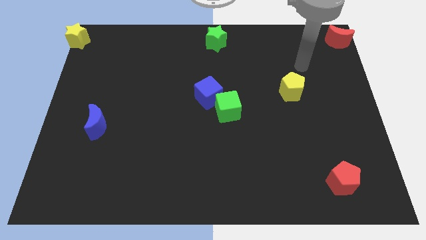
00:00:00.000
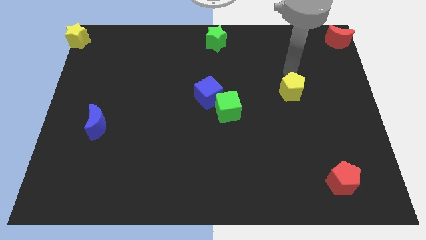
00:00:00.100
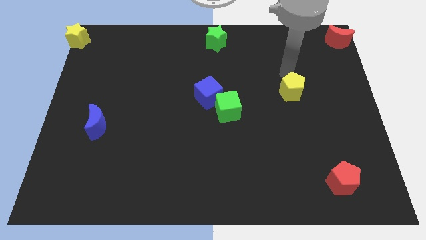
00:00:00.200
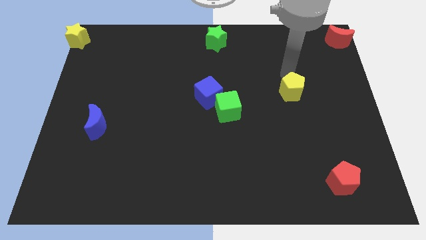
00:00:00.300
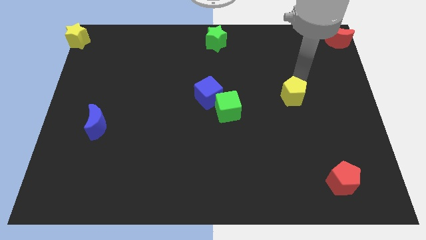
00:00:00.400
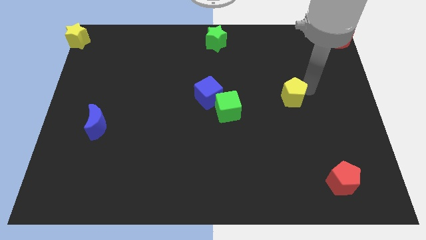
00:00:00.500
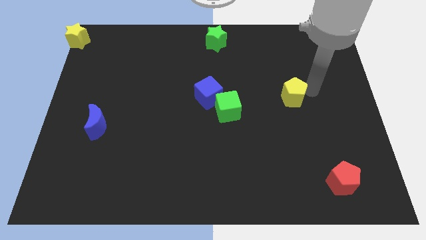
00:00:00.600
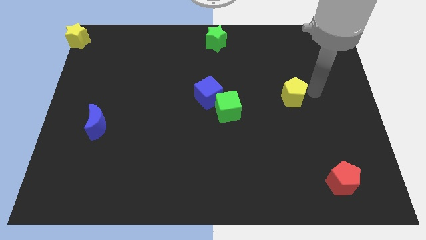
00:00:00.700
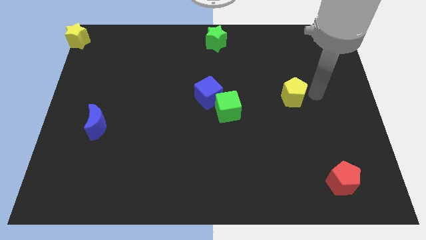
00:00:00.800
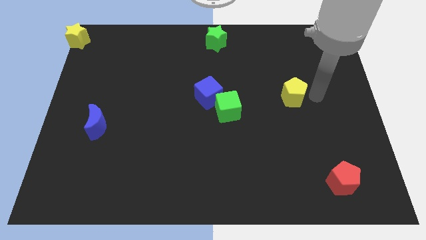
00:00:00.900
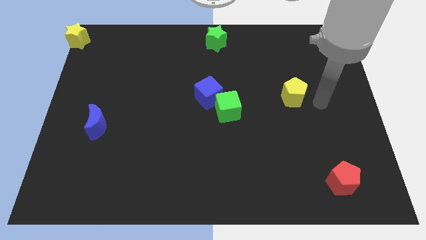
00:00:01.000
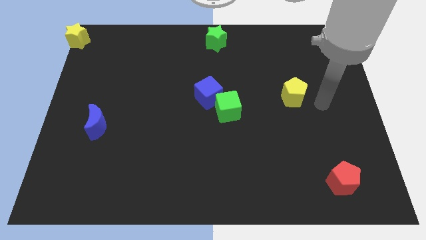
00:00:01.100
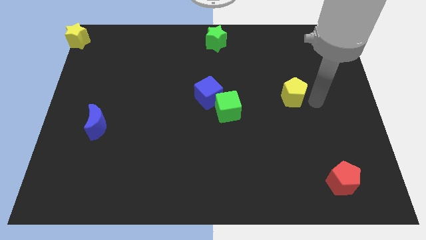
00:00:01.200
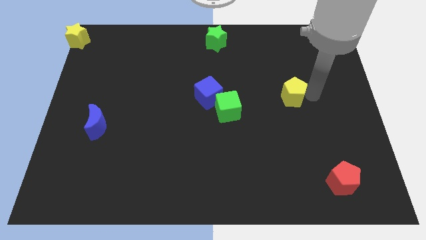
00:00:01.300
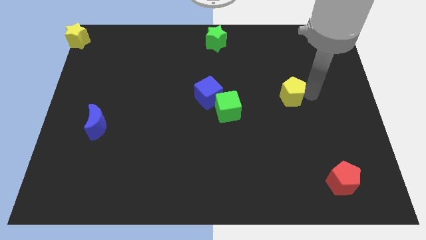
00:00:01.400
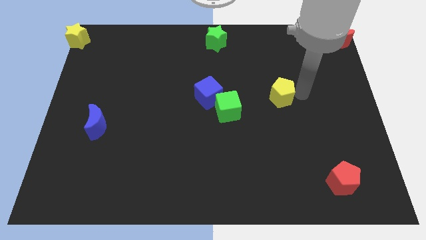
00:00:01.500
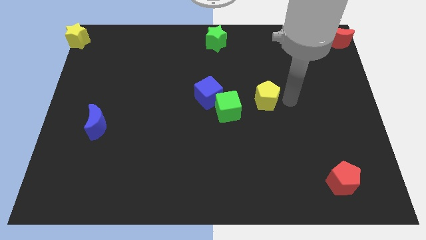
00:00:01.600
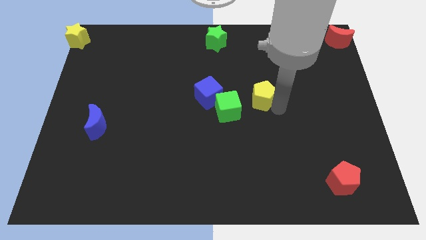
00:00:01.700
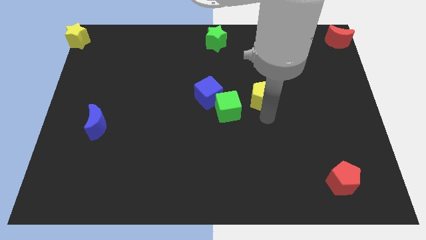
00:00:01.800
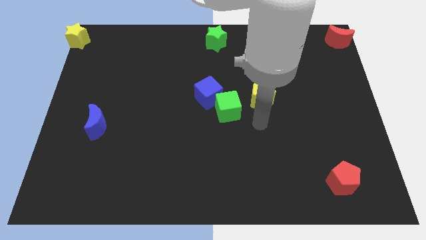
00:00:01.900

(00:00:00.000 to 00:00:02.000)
slightly push the yellow pentagon towards the center of the board

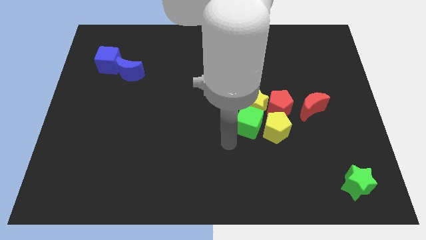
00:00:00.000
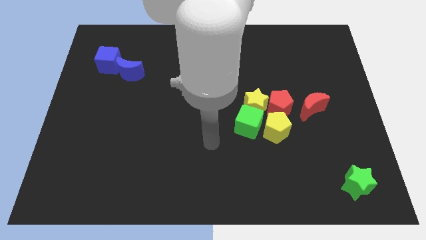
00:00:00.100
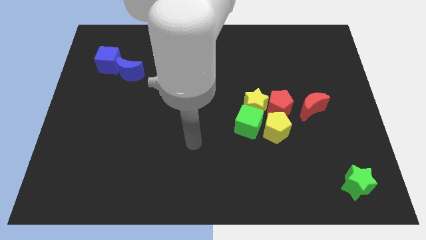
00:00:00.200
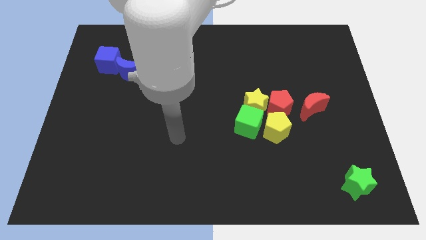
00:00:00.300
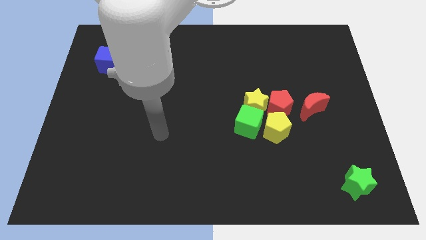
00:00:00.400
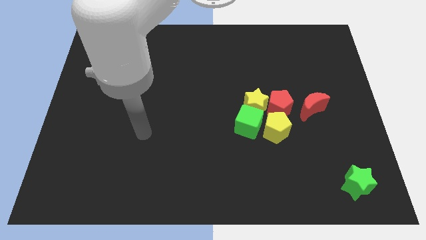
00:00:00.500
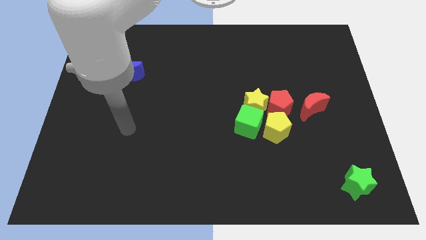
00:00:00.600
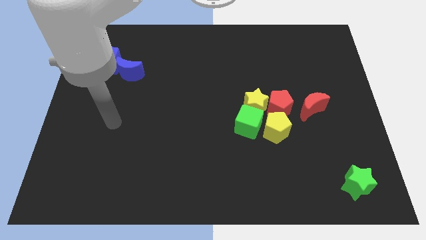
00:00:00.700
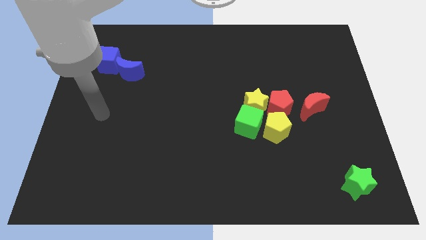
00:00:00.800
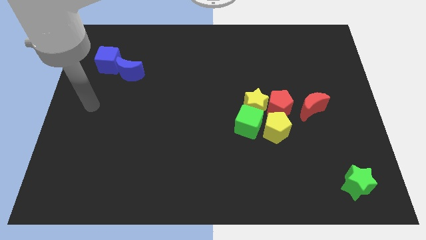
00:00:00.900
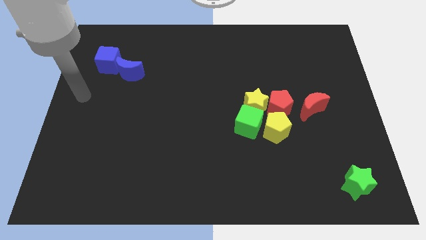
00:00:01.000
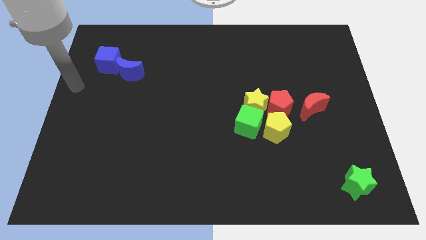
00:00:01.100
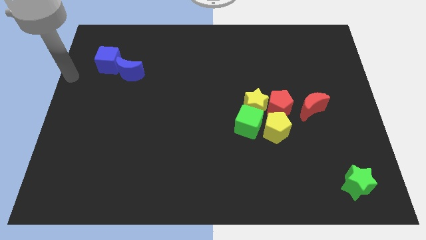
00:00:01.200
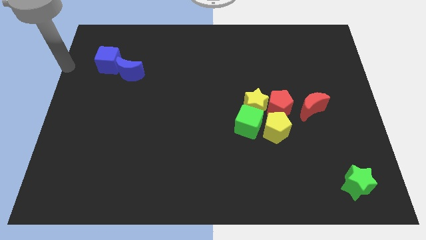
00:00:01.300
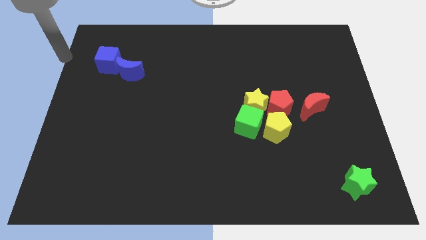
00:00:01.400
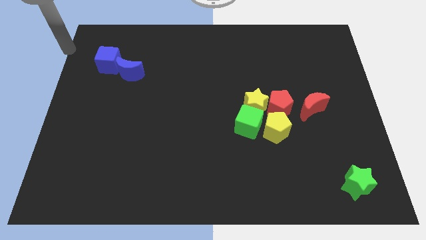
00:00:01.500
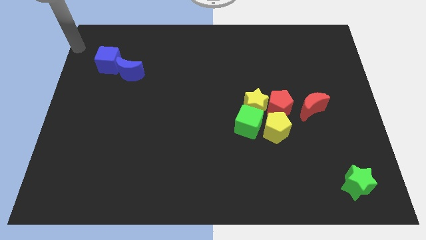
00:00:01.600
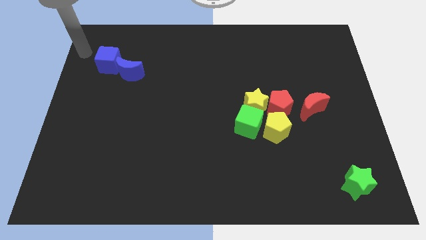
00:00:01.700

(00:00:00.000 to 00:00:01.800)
move your arm towards the blue cube

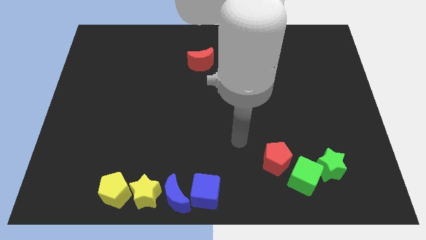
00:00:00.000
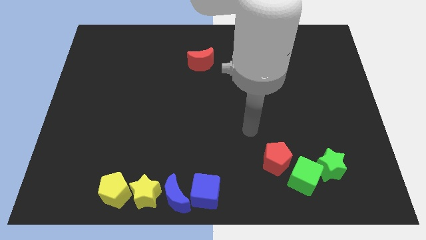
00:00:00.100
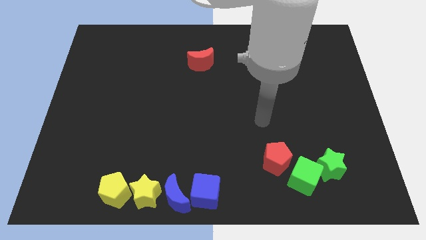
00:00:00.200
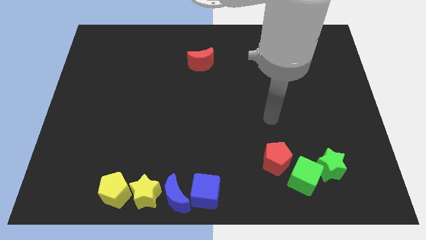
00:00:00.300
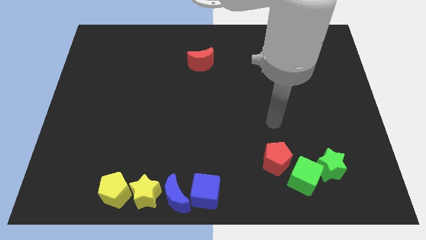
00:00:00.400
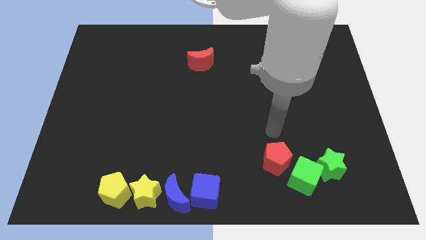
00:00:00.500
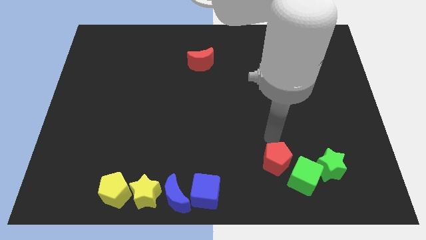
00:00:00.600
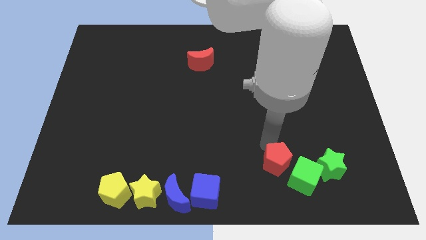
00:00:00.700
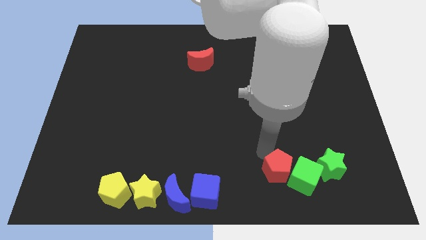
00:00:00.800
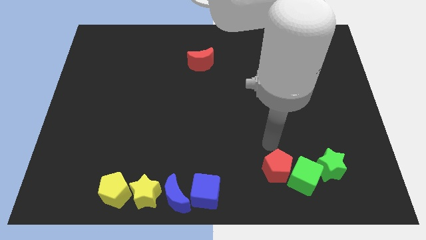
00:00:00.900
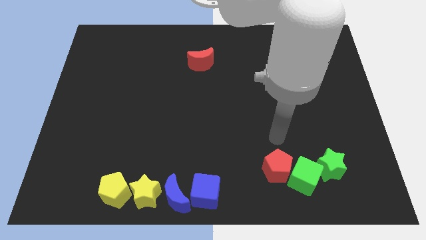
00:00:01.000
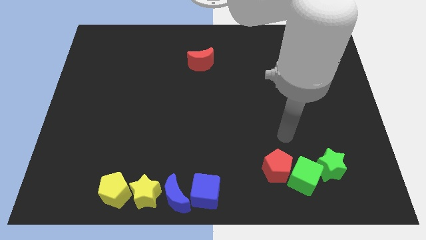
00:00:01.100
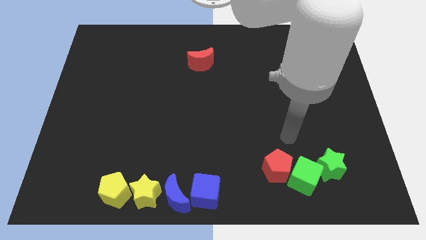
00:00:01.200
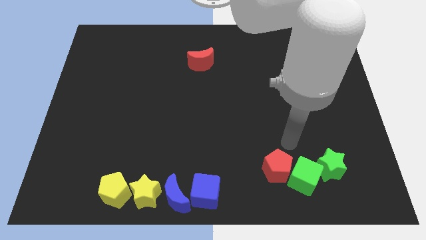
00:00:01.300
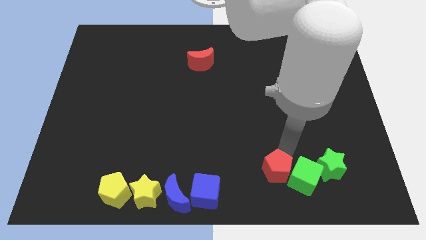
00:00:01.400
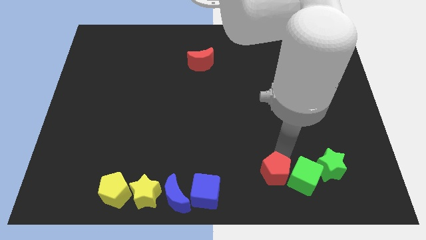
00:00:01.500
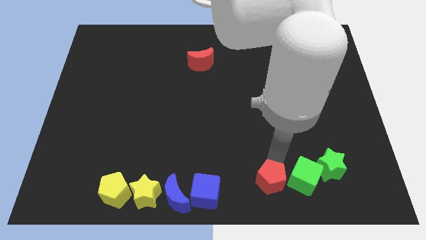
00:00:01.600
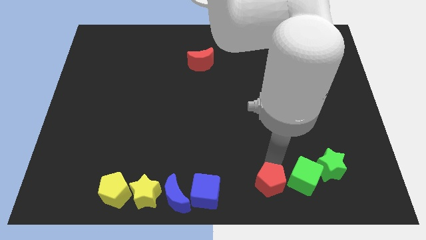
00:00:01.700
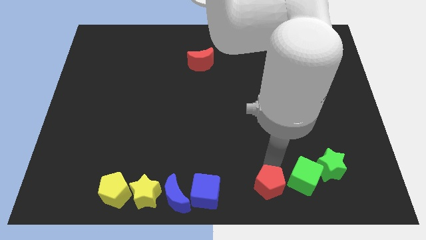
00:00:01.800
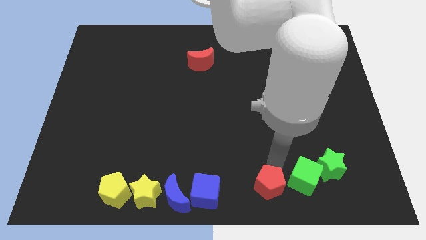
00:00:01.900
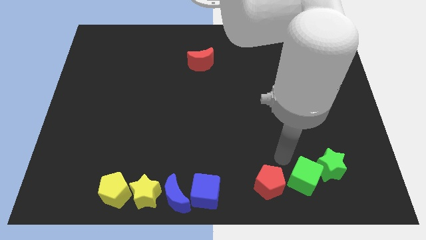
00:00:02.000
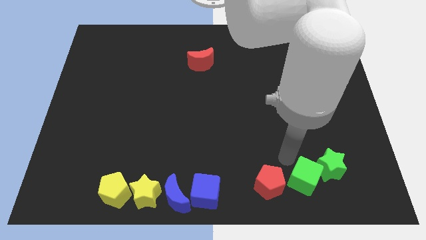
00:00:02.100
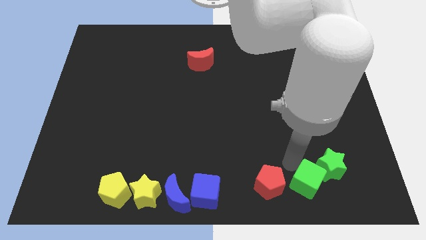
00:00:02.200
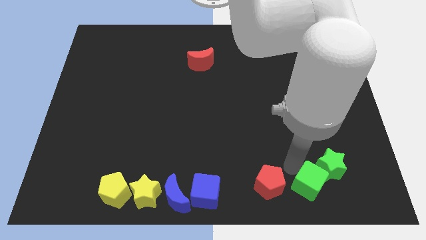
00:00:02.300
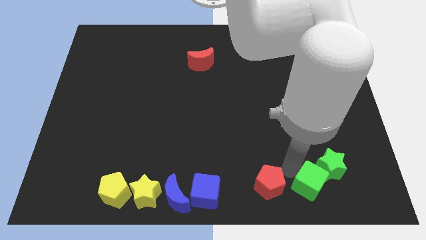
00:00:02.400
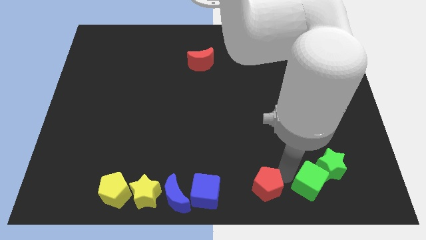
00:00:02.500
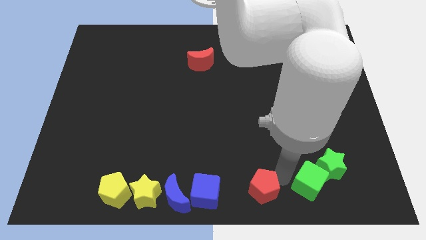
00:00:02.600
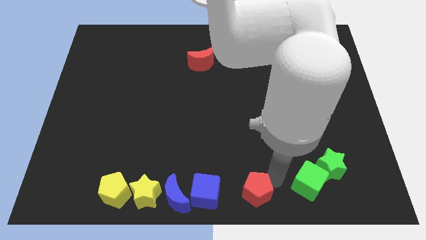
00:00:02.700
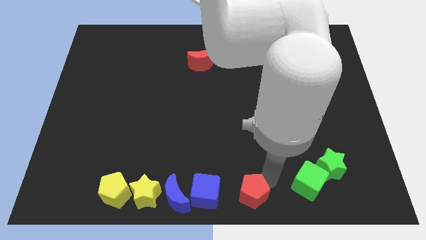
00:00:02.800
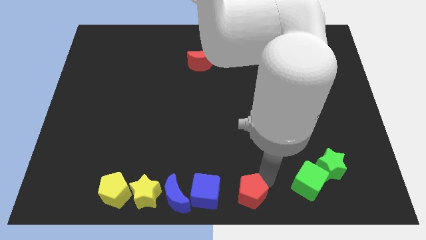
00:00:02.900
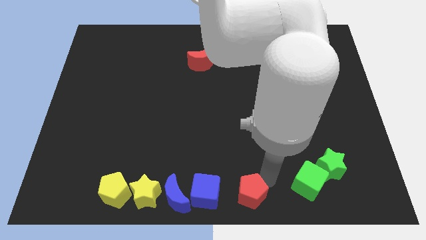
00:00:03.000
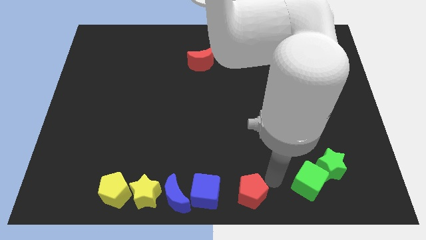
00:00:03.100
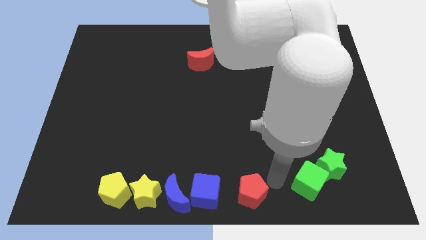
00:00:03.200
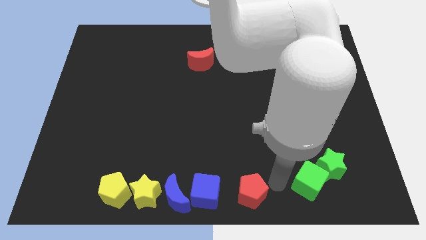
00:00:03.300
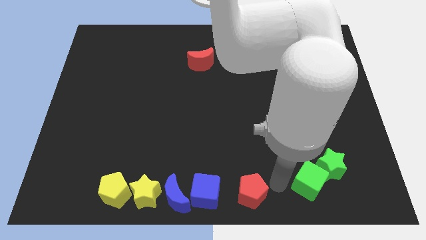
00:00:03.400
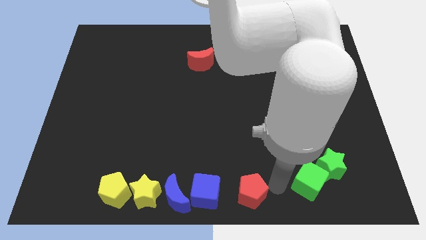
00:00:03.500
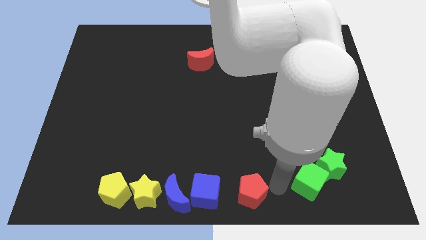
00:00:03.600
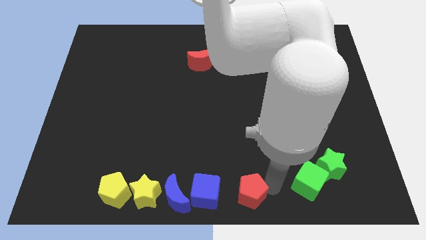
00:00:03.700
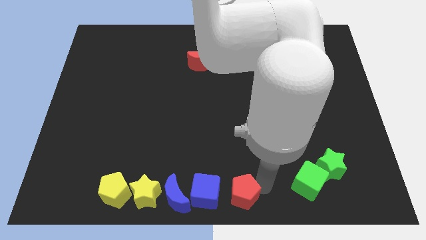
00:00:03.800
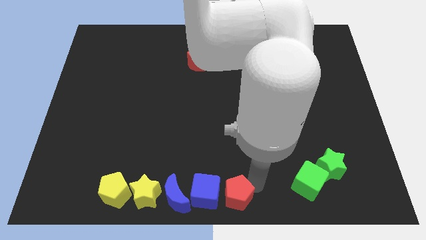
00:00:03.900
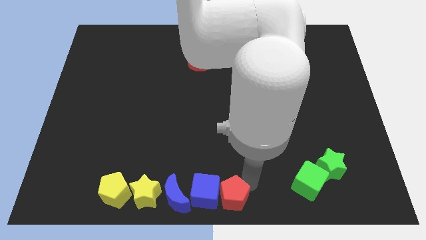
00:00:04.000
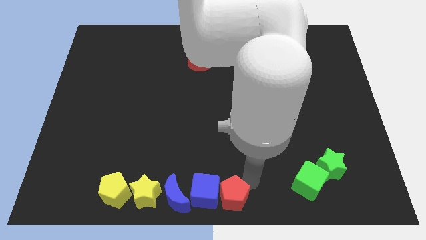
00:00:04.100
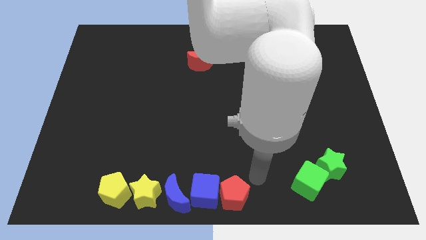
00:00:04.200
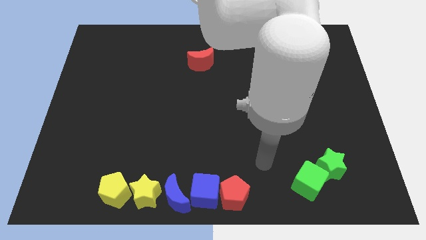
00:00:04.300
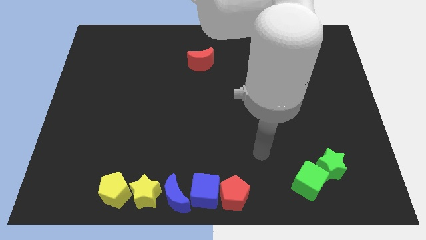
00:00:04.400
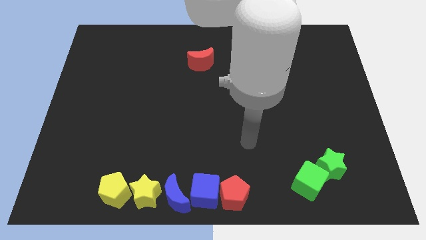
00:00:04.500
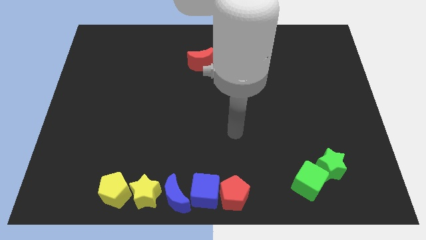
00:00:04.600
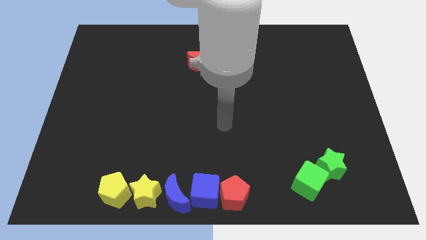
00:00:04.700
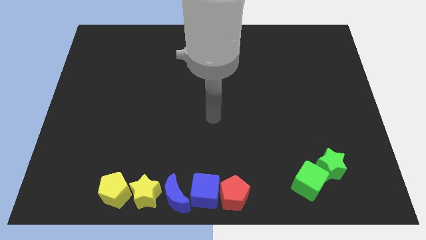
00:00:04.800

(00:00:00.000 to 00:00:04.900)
move the red pentagon to the right of the blue cube

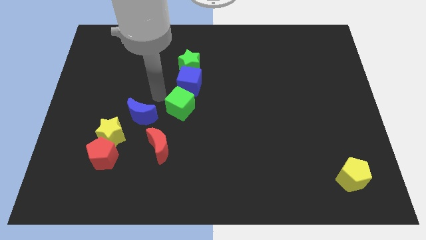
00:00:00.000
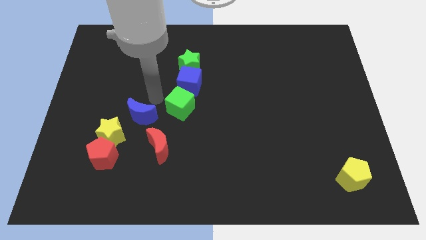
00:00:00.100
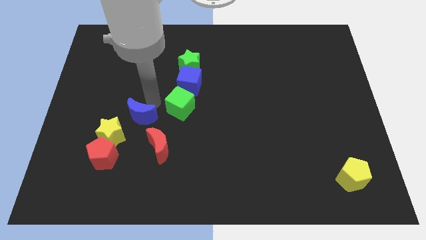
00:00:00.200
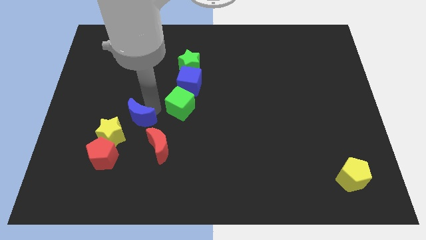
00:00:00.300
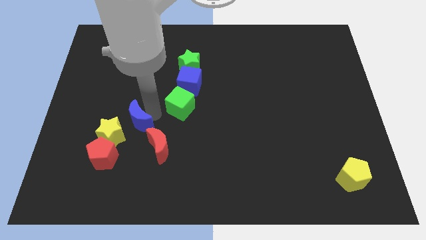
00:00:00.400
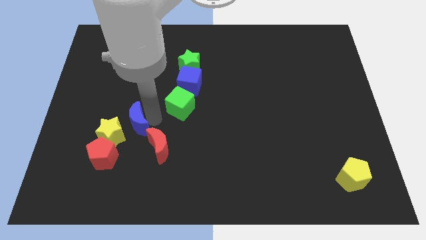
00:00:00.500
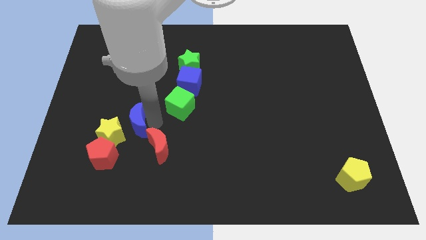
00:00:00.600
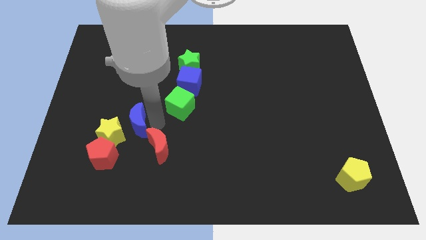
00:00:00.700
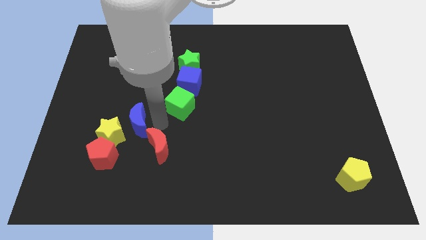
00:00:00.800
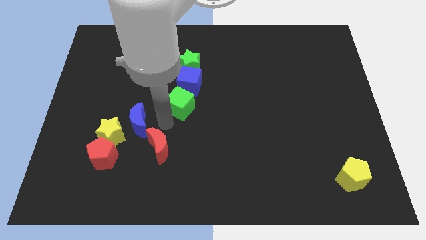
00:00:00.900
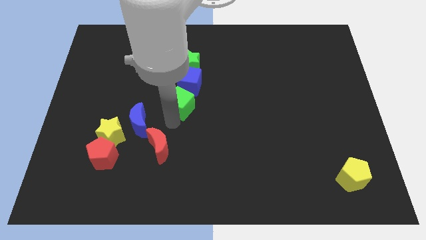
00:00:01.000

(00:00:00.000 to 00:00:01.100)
push the blue crescent towards the yellow star
